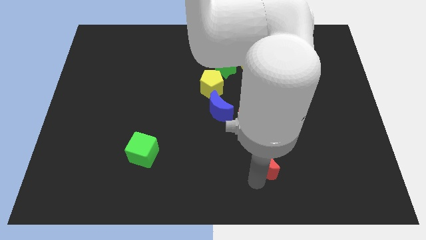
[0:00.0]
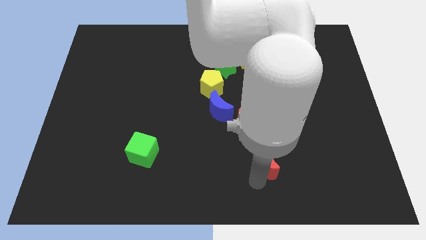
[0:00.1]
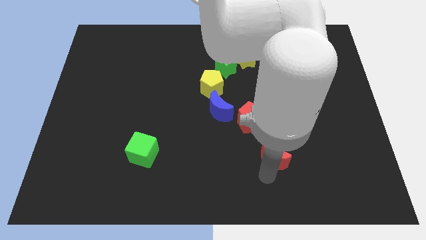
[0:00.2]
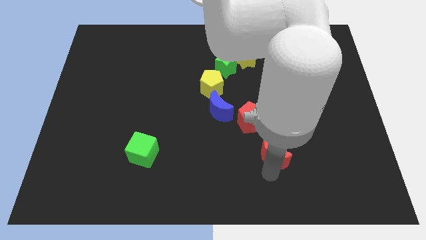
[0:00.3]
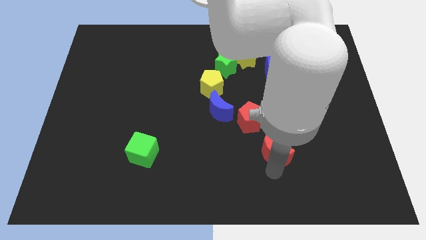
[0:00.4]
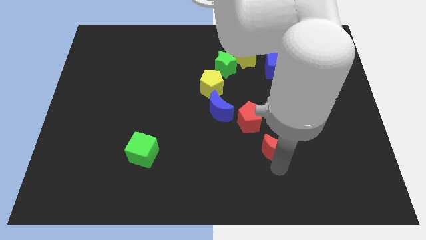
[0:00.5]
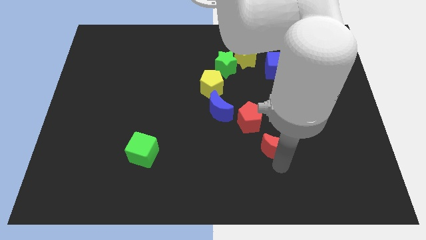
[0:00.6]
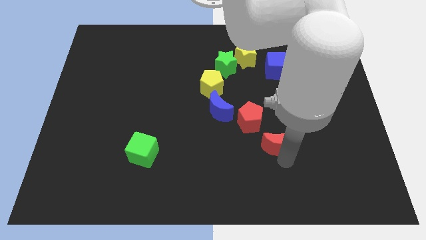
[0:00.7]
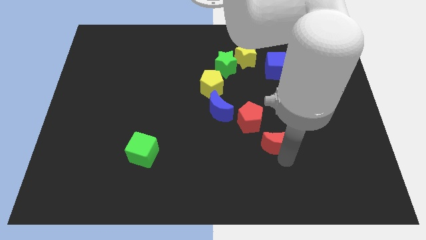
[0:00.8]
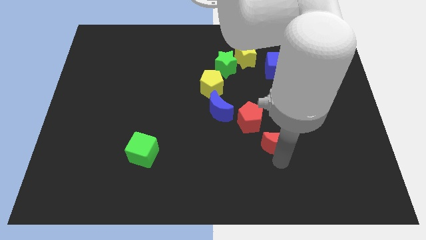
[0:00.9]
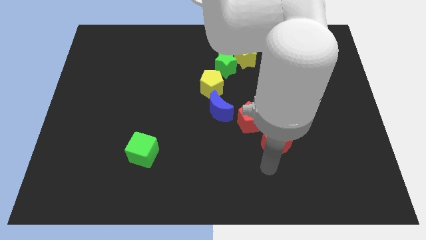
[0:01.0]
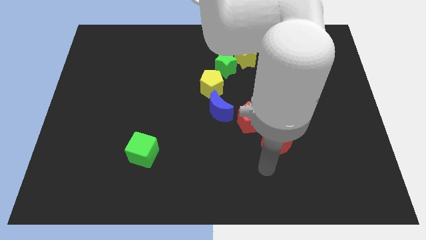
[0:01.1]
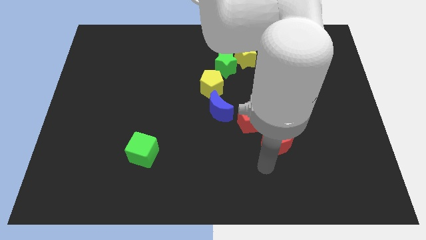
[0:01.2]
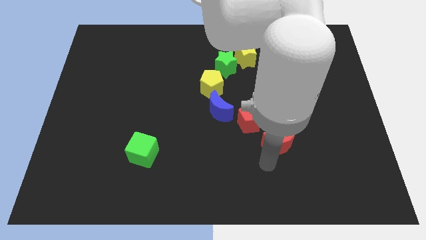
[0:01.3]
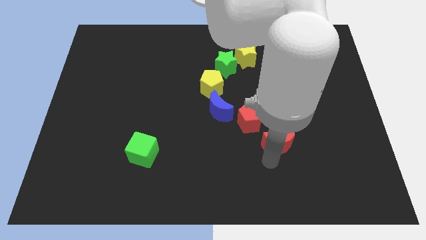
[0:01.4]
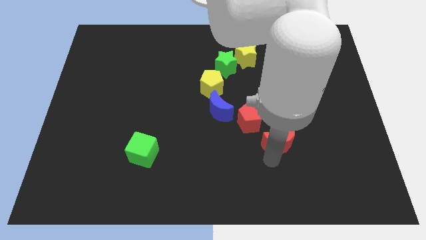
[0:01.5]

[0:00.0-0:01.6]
move the red moon close to the red pentagon

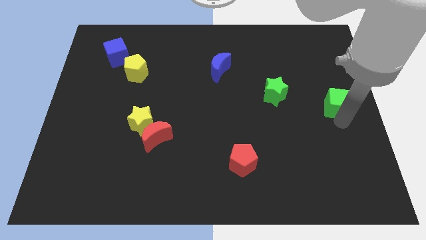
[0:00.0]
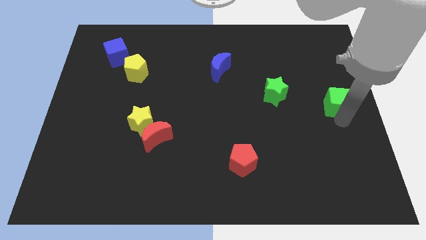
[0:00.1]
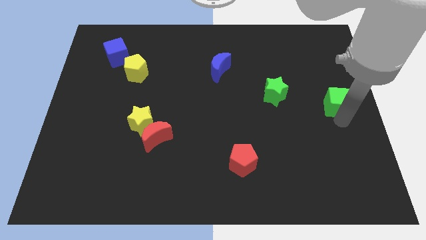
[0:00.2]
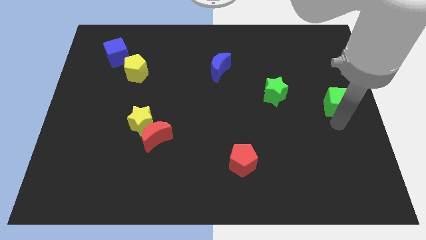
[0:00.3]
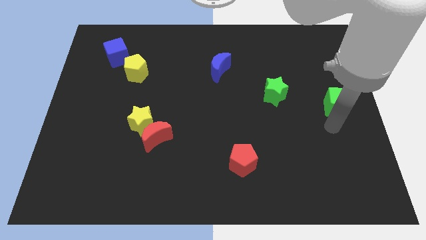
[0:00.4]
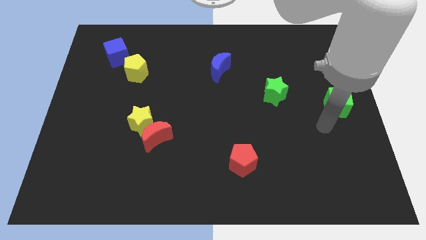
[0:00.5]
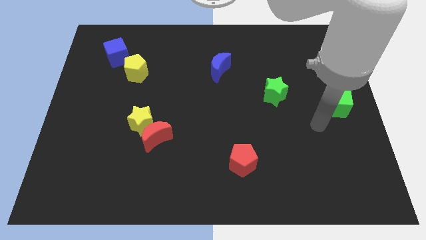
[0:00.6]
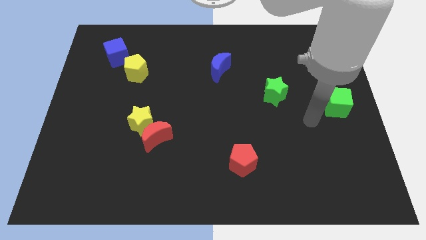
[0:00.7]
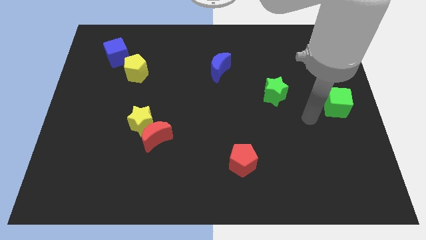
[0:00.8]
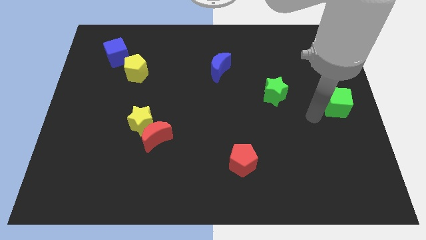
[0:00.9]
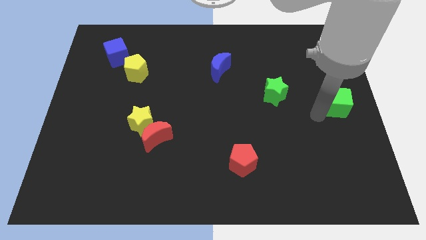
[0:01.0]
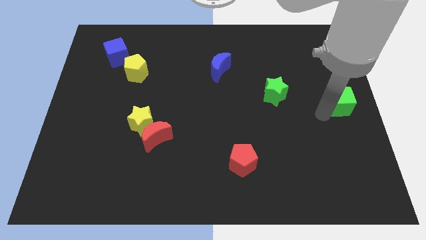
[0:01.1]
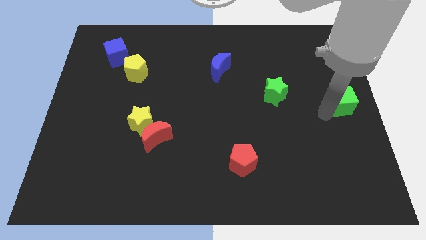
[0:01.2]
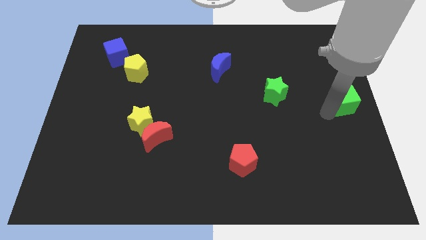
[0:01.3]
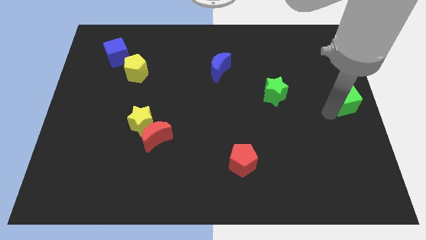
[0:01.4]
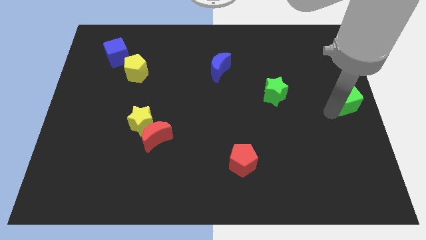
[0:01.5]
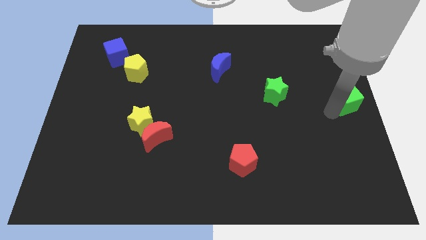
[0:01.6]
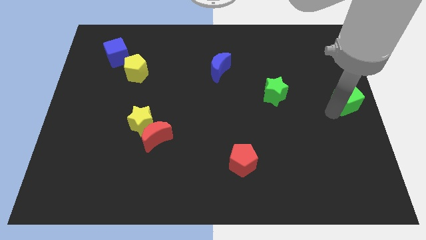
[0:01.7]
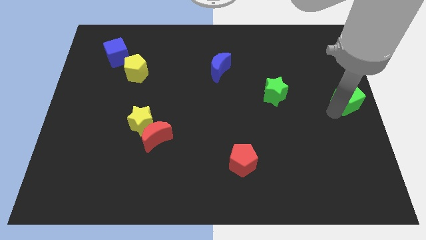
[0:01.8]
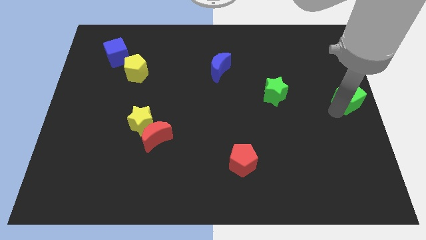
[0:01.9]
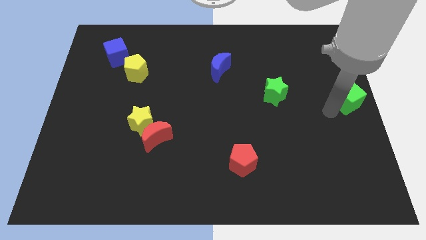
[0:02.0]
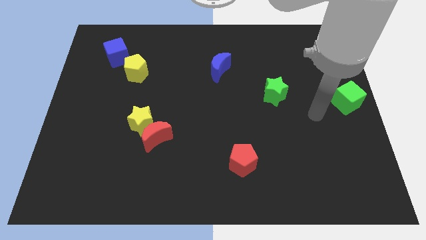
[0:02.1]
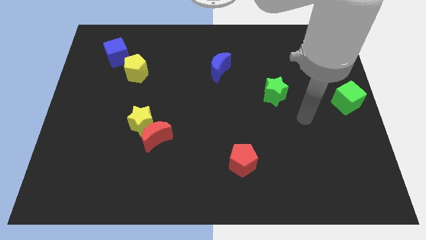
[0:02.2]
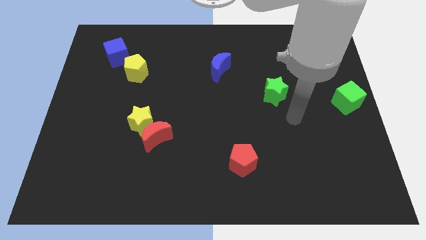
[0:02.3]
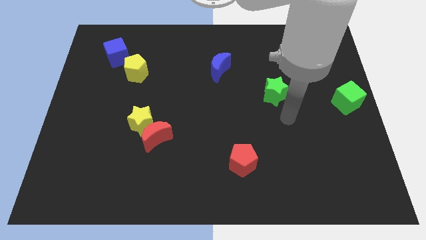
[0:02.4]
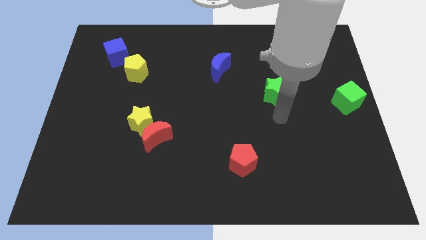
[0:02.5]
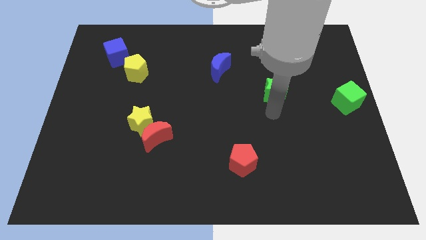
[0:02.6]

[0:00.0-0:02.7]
move the green cube to the right center

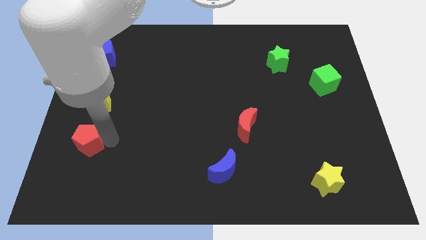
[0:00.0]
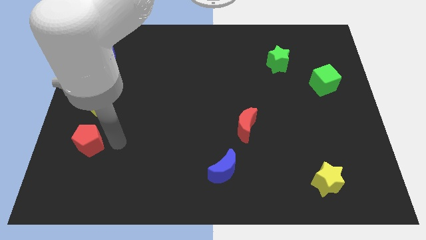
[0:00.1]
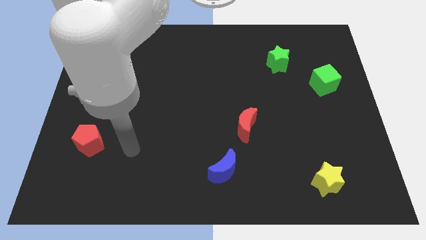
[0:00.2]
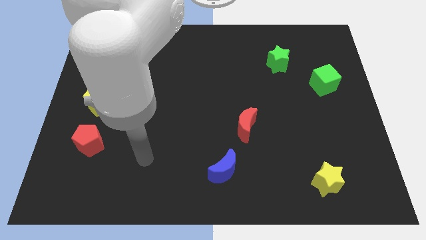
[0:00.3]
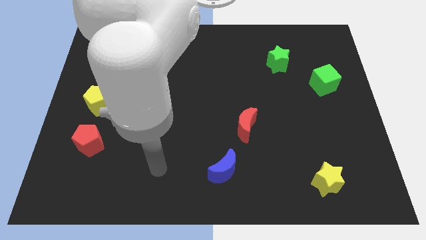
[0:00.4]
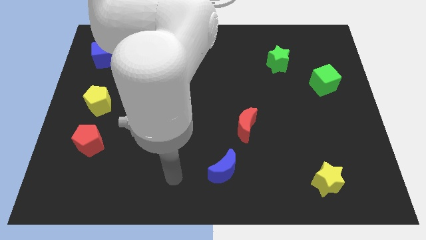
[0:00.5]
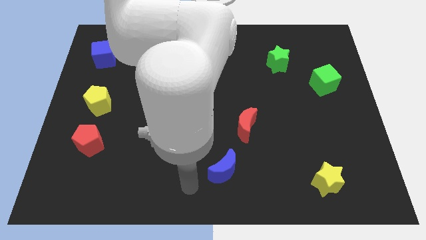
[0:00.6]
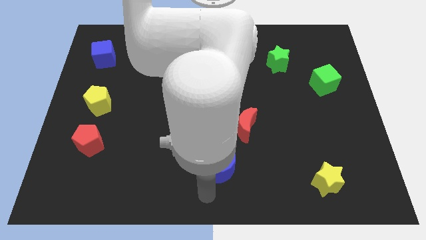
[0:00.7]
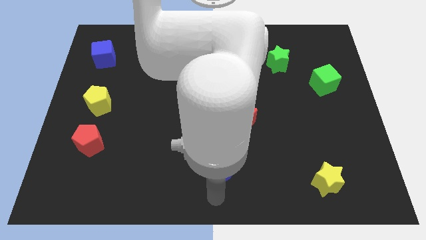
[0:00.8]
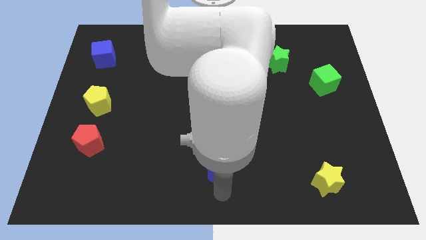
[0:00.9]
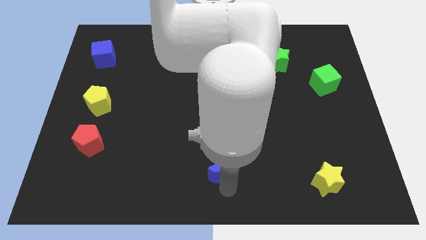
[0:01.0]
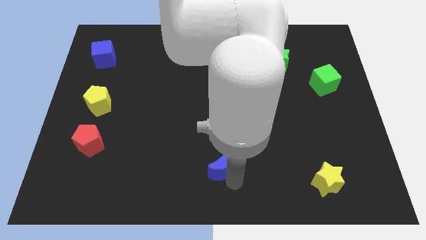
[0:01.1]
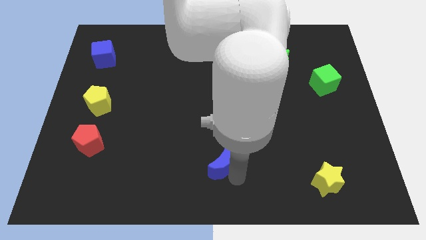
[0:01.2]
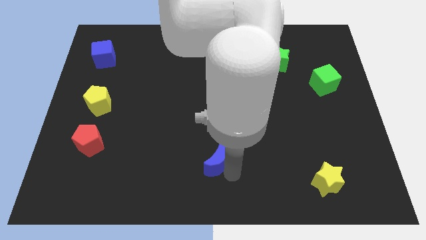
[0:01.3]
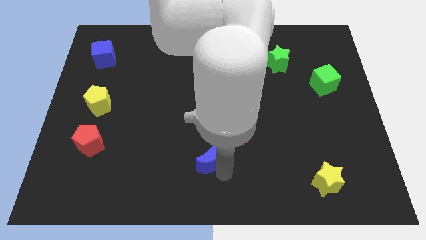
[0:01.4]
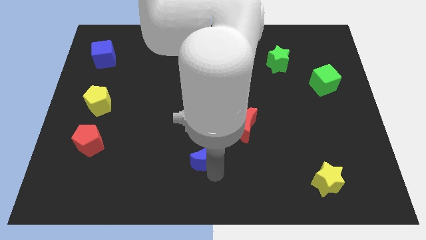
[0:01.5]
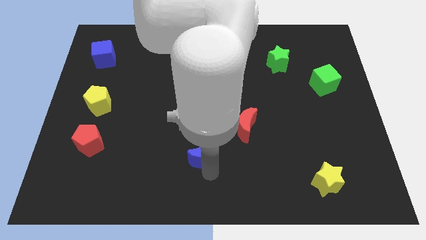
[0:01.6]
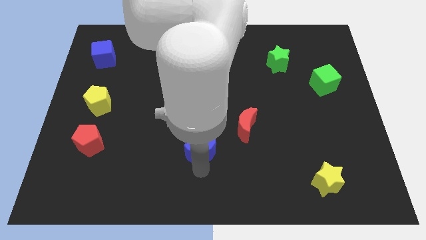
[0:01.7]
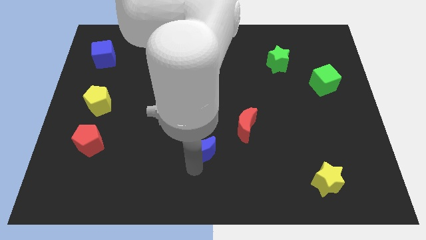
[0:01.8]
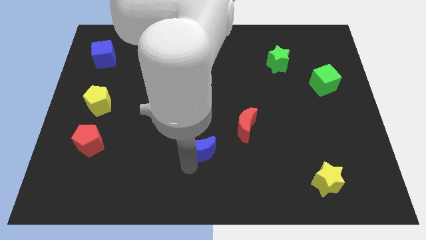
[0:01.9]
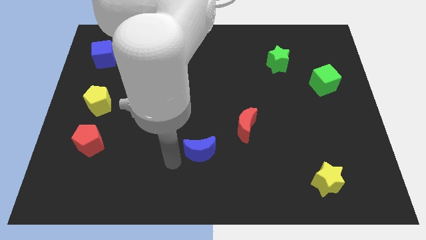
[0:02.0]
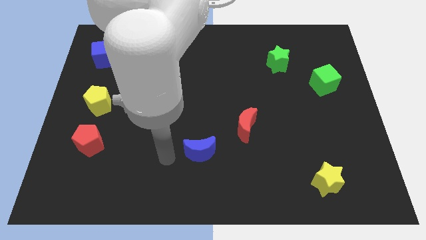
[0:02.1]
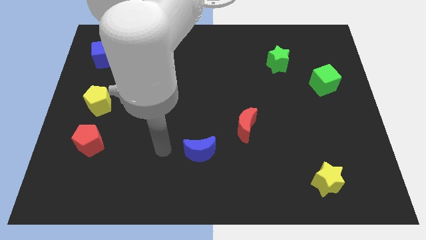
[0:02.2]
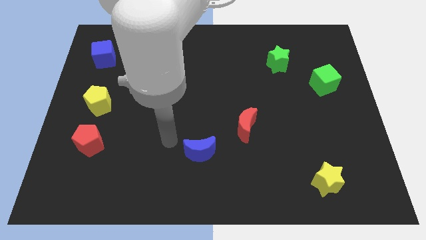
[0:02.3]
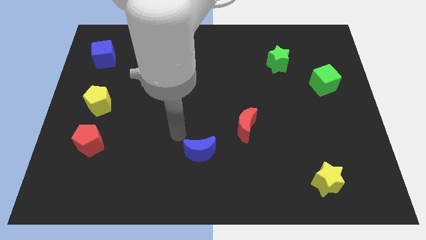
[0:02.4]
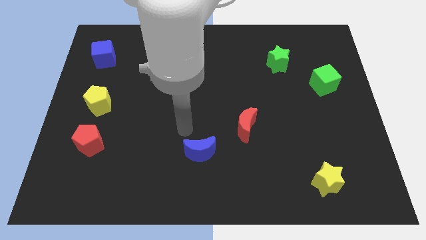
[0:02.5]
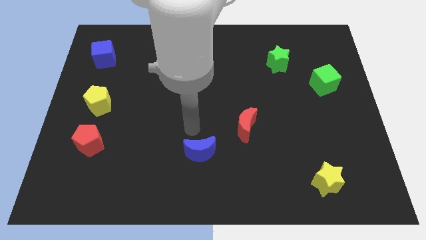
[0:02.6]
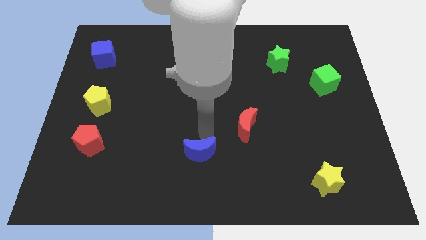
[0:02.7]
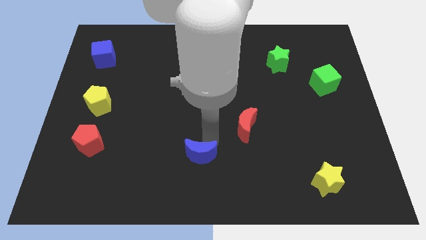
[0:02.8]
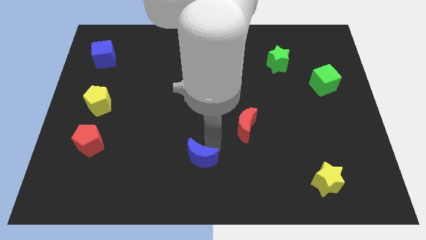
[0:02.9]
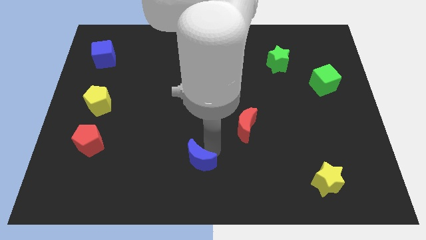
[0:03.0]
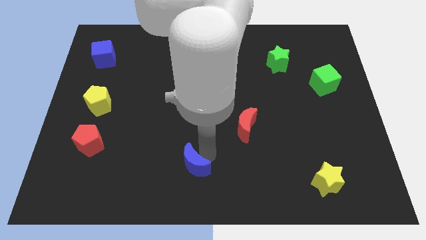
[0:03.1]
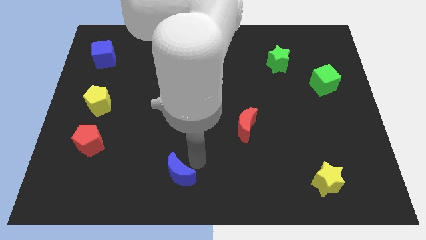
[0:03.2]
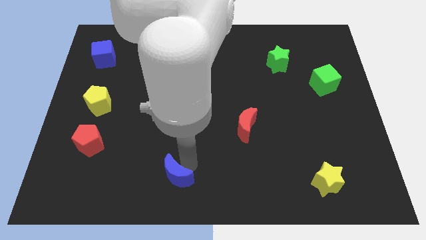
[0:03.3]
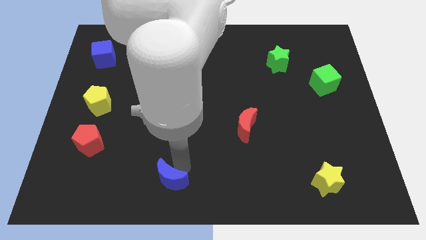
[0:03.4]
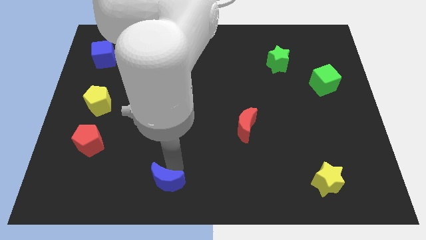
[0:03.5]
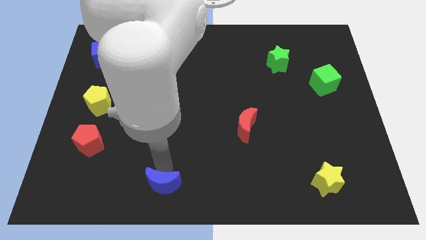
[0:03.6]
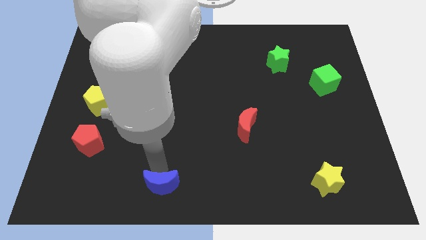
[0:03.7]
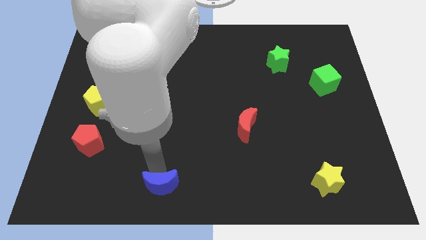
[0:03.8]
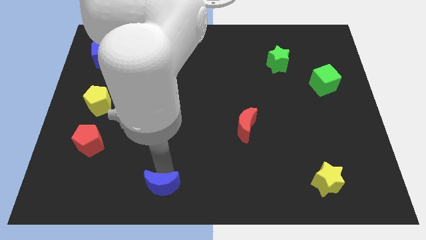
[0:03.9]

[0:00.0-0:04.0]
push the blue crescent towards the bottom side of the board

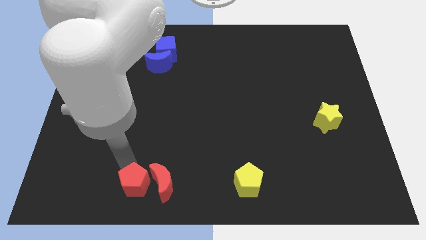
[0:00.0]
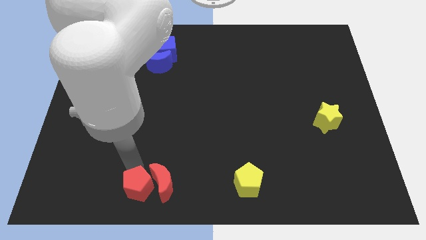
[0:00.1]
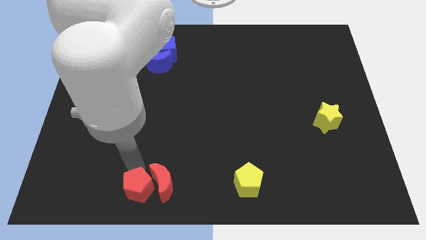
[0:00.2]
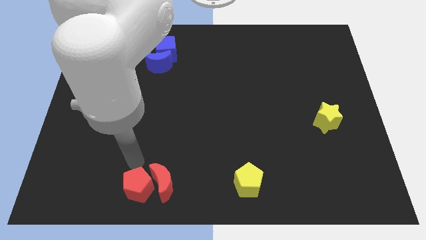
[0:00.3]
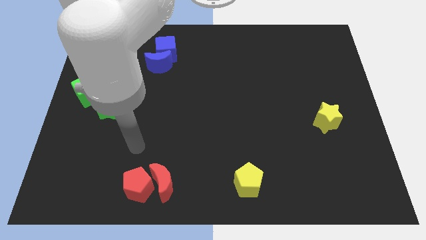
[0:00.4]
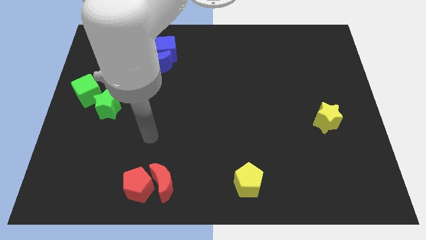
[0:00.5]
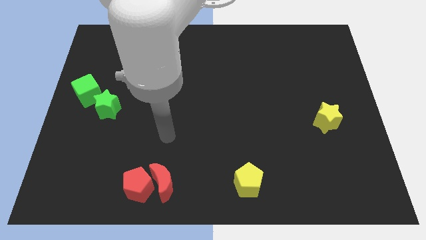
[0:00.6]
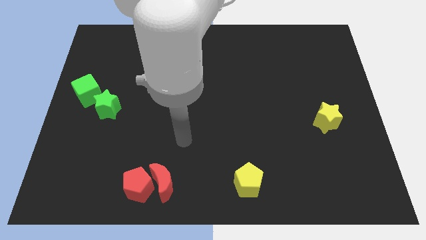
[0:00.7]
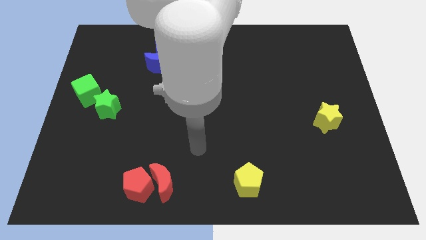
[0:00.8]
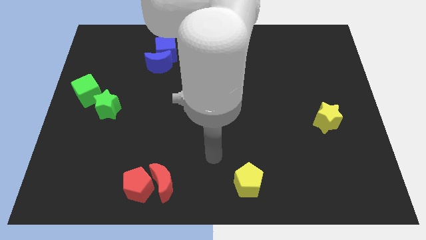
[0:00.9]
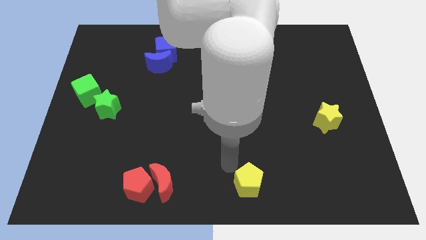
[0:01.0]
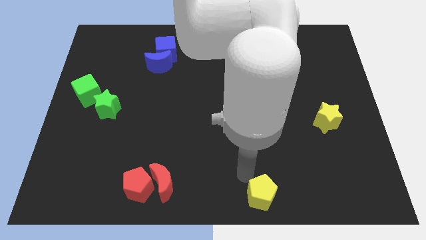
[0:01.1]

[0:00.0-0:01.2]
move your arm top left to the yellow pentagon
